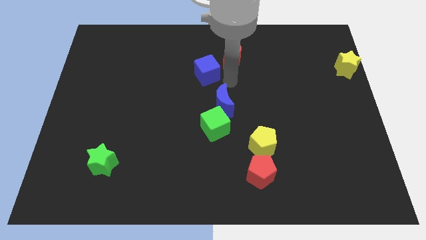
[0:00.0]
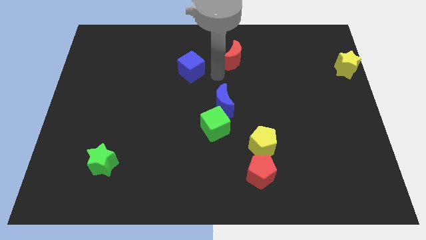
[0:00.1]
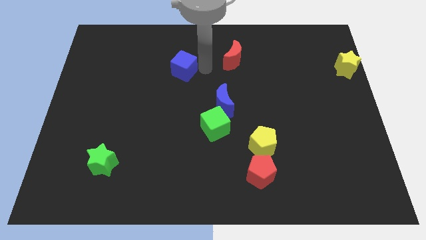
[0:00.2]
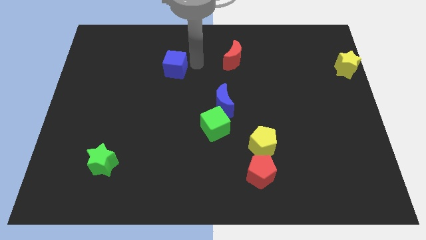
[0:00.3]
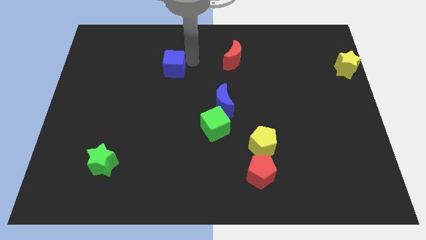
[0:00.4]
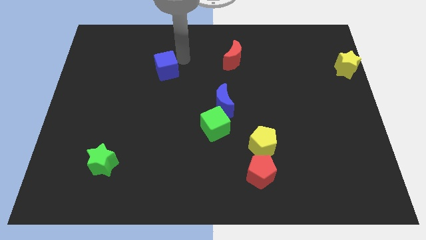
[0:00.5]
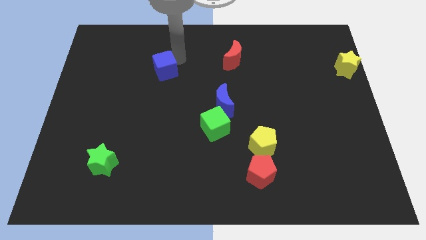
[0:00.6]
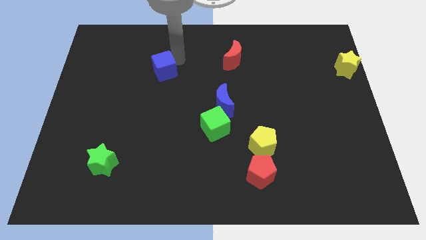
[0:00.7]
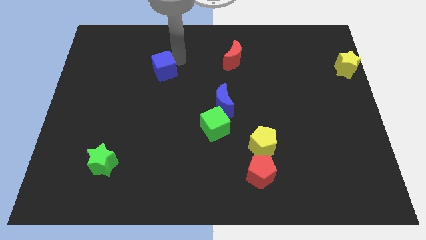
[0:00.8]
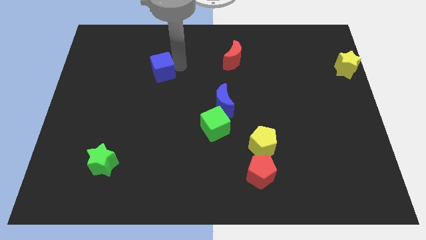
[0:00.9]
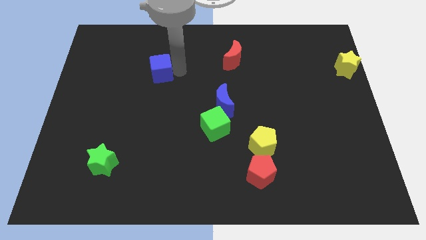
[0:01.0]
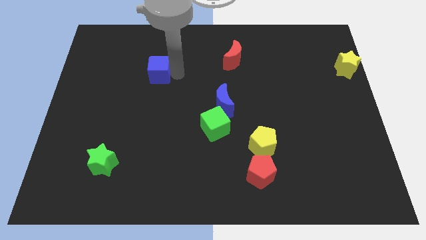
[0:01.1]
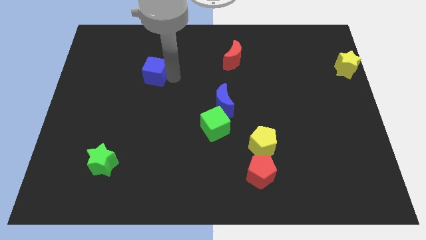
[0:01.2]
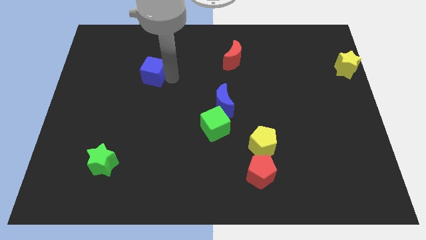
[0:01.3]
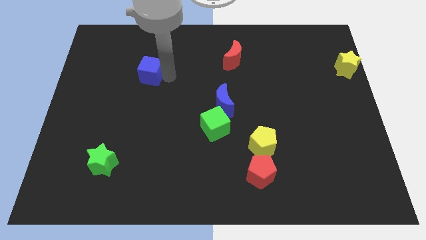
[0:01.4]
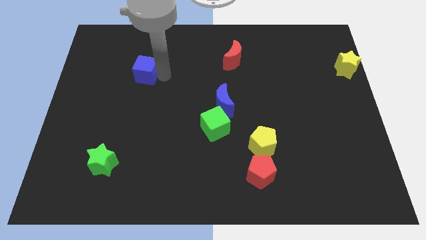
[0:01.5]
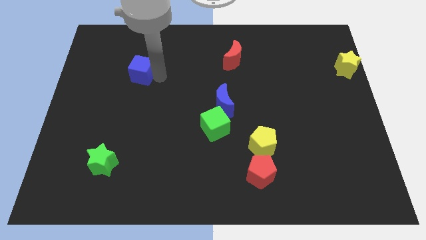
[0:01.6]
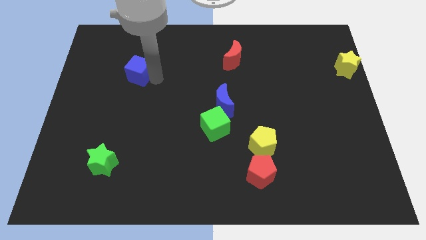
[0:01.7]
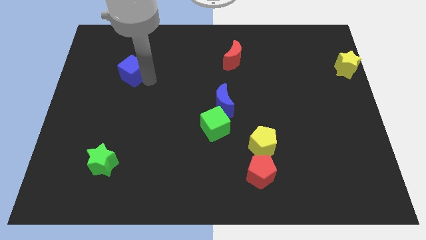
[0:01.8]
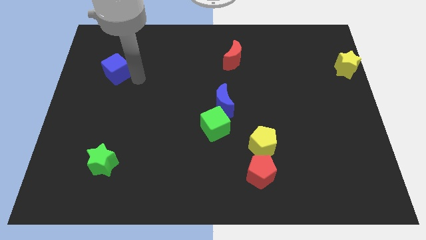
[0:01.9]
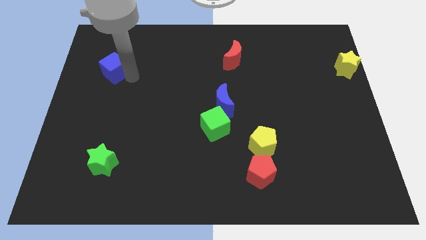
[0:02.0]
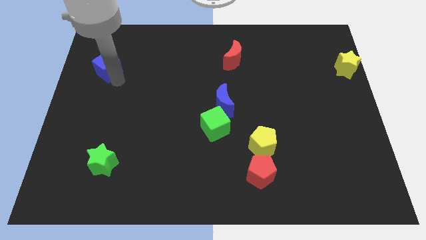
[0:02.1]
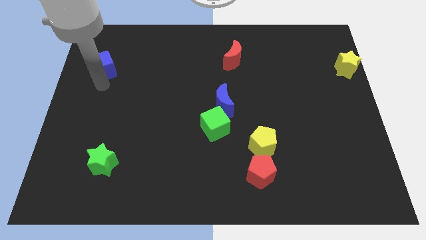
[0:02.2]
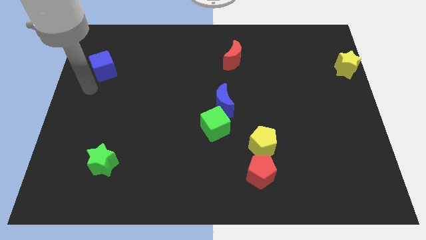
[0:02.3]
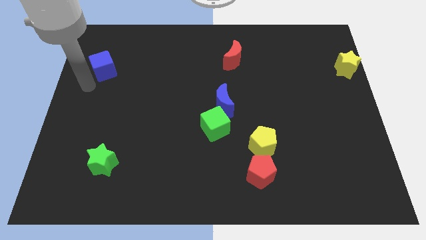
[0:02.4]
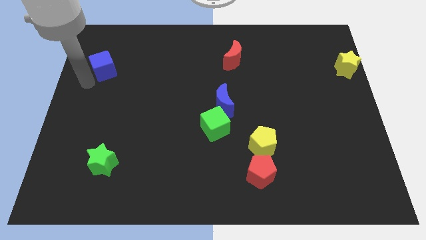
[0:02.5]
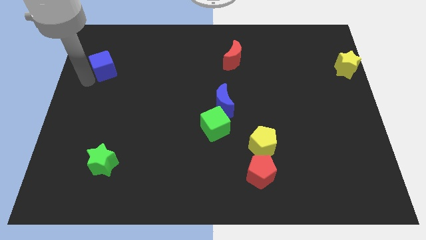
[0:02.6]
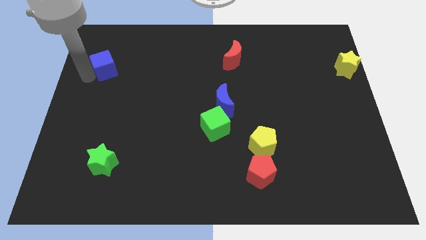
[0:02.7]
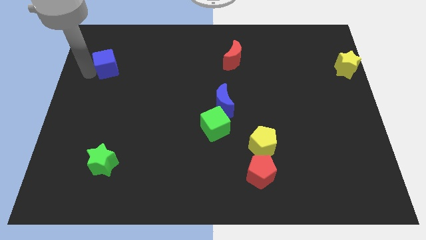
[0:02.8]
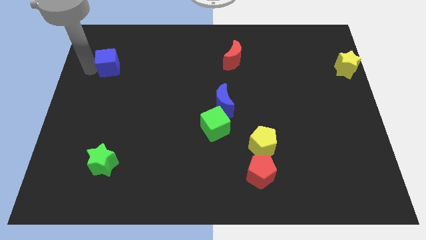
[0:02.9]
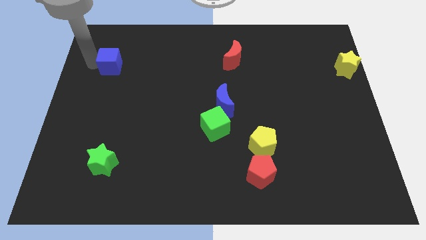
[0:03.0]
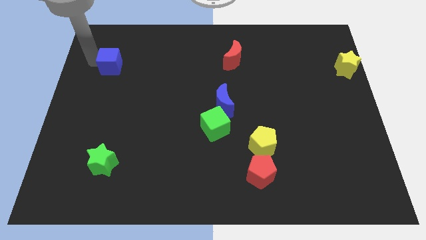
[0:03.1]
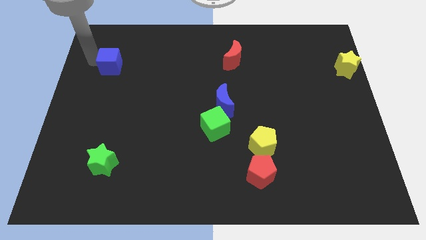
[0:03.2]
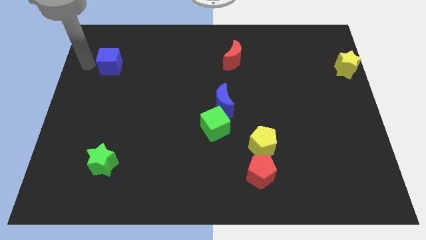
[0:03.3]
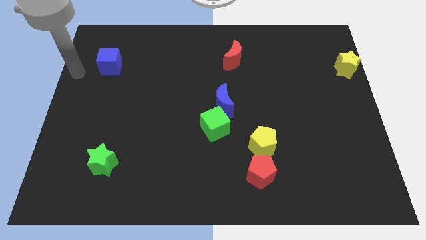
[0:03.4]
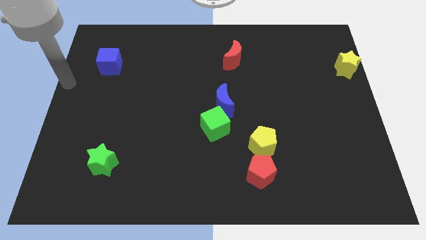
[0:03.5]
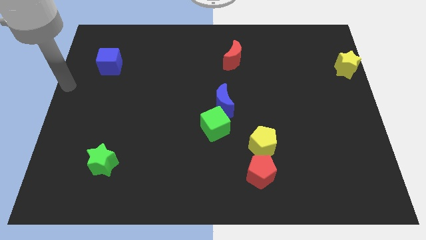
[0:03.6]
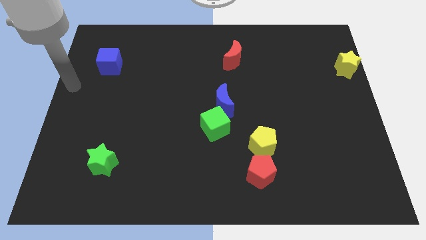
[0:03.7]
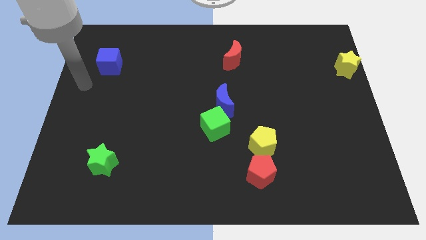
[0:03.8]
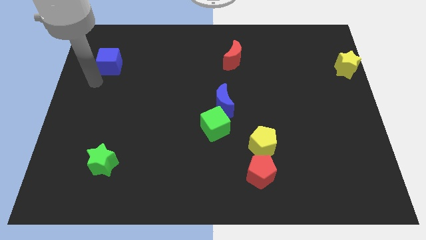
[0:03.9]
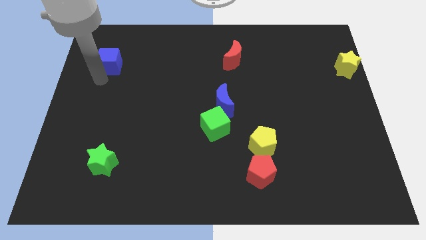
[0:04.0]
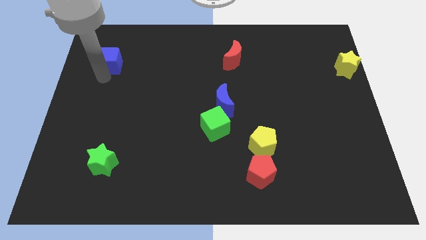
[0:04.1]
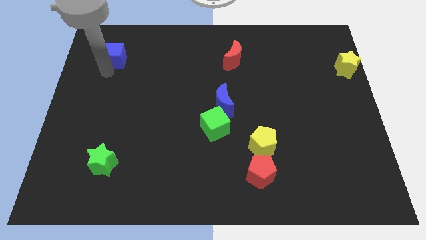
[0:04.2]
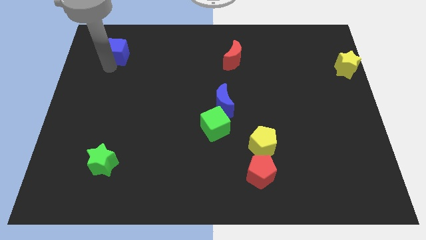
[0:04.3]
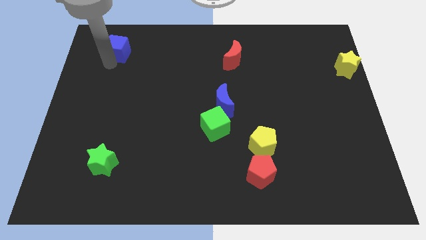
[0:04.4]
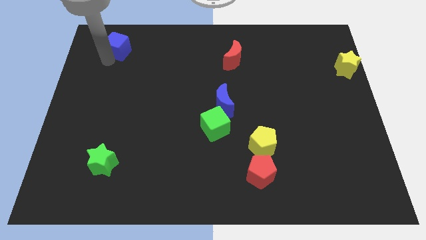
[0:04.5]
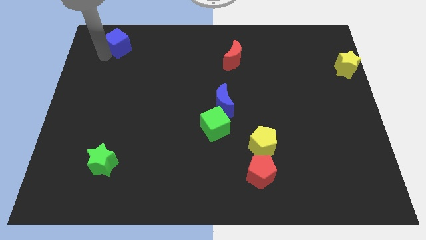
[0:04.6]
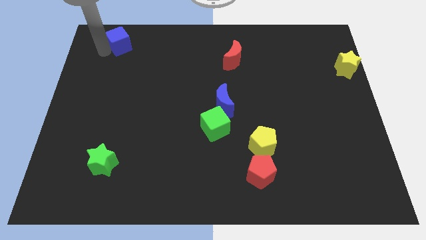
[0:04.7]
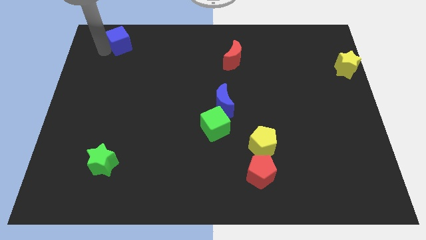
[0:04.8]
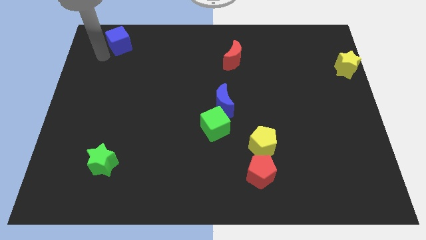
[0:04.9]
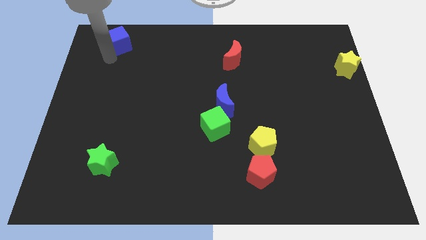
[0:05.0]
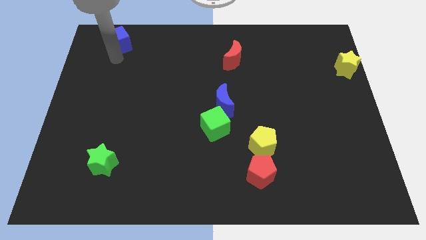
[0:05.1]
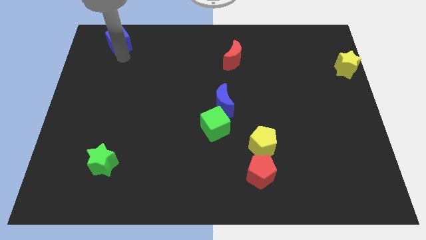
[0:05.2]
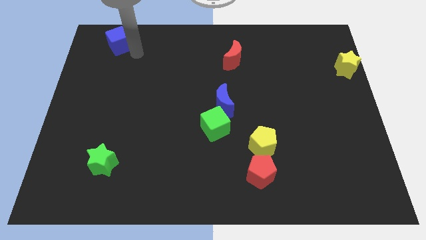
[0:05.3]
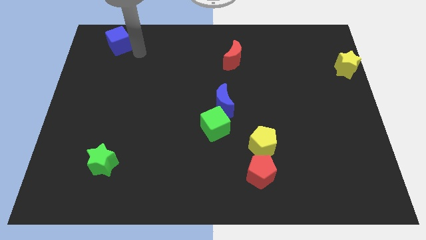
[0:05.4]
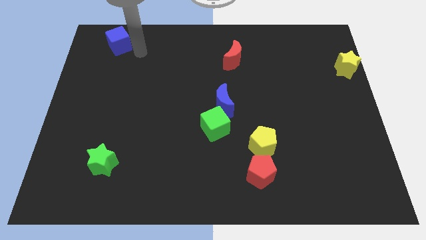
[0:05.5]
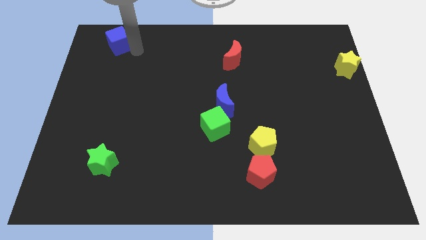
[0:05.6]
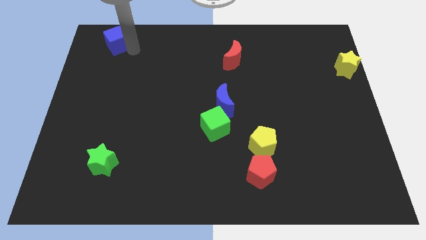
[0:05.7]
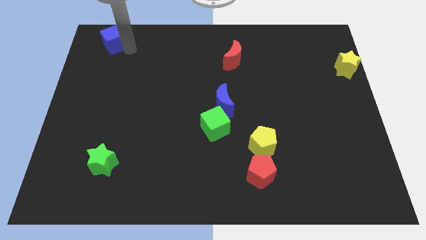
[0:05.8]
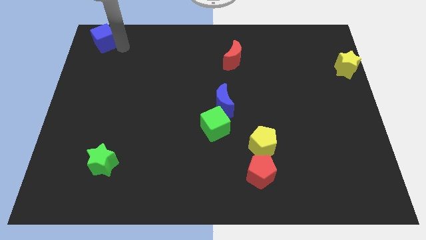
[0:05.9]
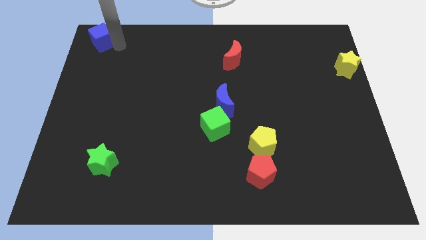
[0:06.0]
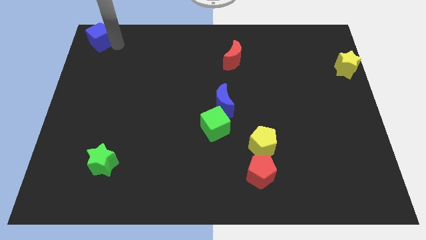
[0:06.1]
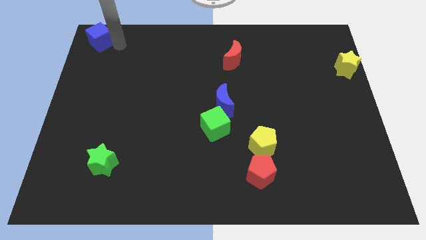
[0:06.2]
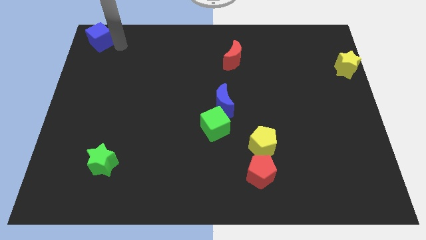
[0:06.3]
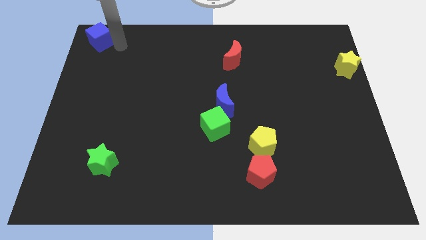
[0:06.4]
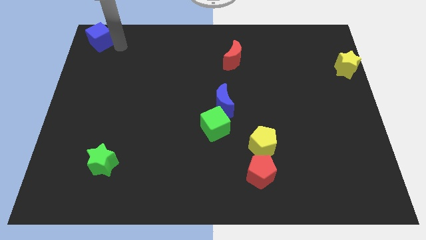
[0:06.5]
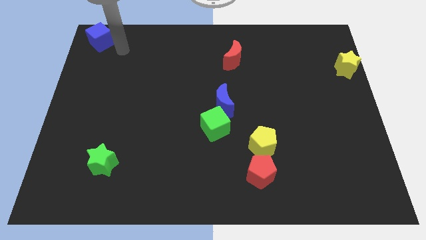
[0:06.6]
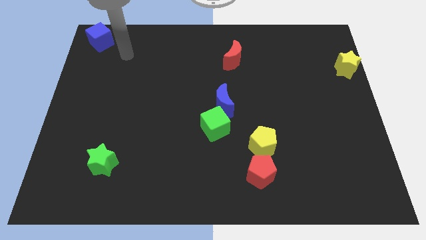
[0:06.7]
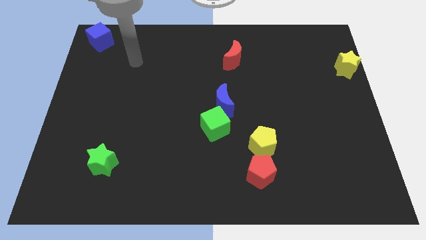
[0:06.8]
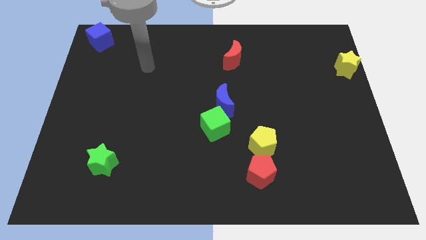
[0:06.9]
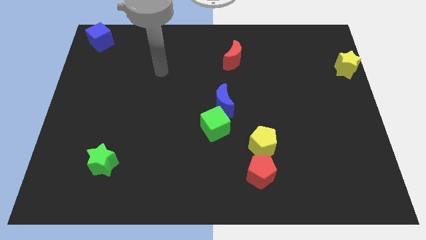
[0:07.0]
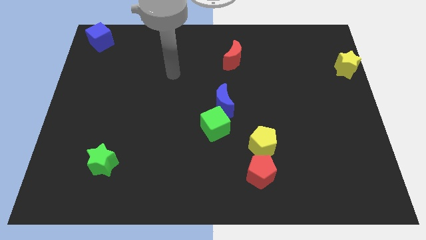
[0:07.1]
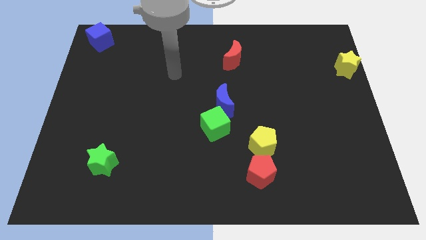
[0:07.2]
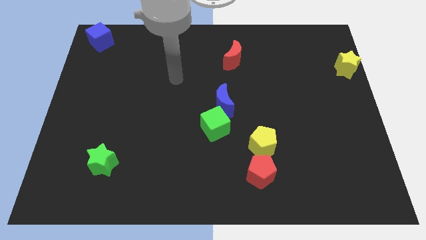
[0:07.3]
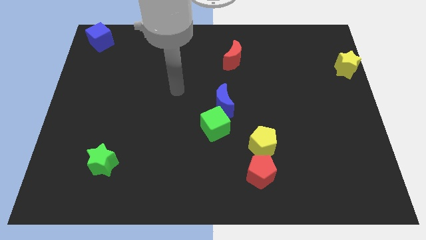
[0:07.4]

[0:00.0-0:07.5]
push blue block towards the top left corner of the board

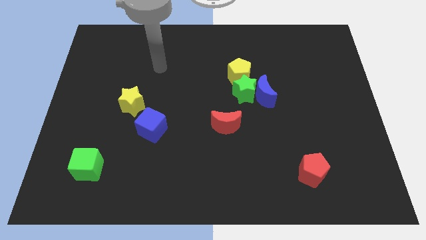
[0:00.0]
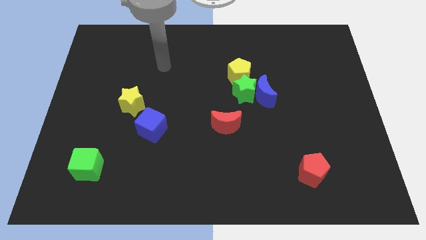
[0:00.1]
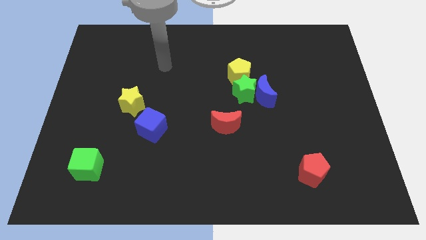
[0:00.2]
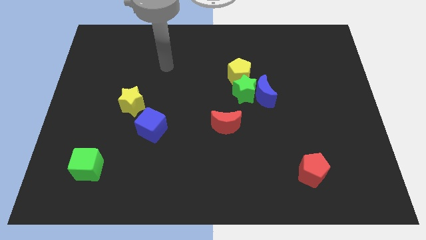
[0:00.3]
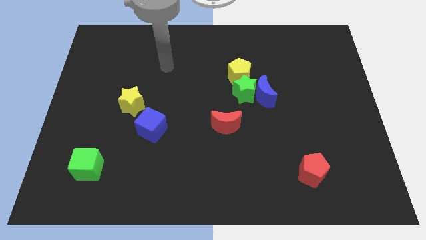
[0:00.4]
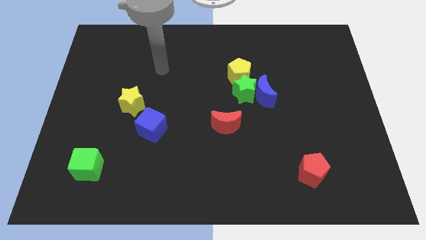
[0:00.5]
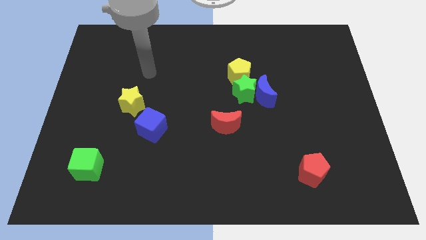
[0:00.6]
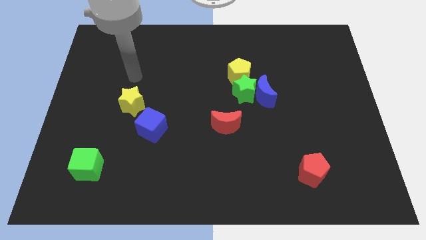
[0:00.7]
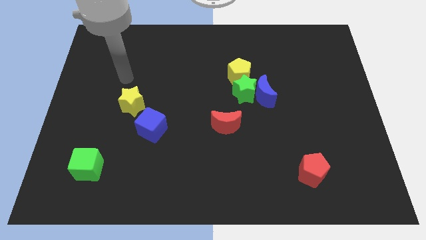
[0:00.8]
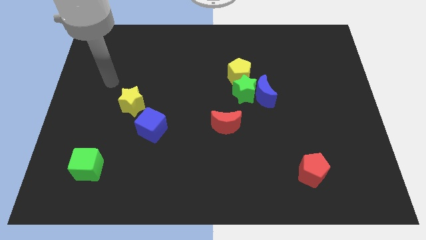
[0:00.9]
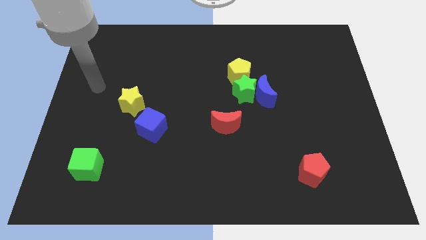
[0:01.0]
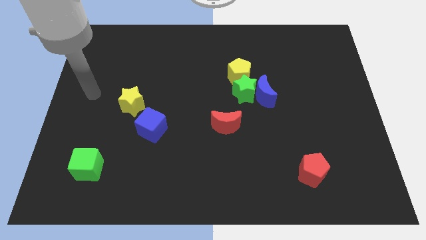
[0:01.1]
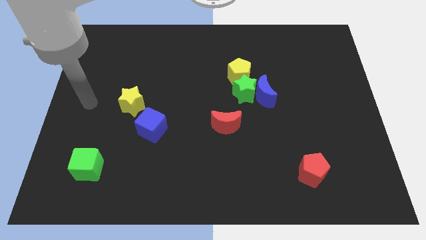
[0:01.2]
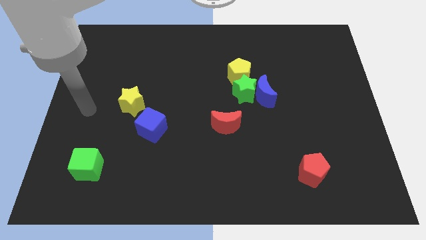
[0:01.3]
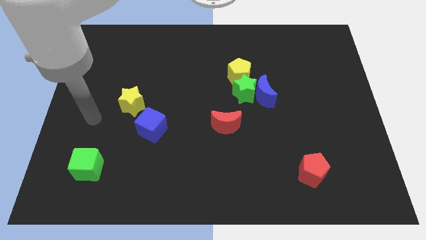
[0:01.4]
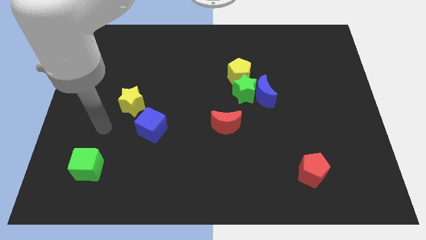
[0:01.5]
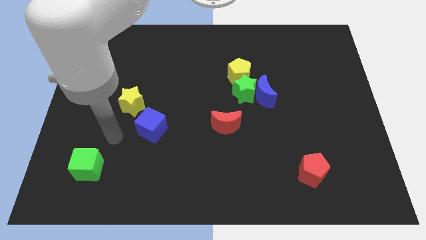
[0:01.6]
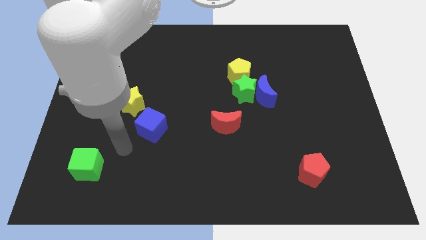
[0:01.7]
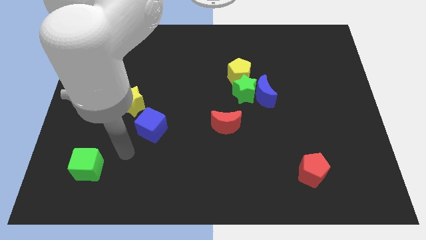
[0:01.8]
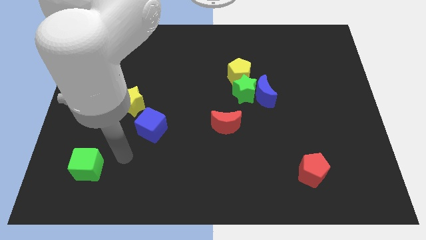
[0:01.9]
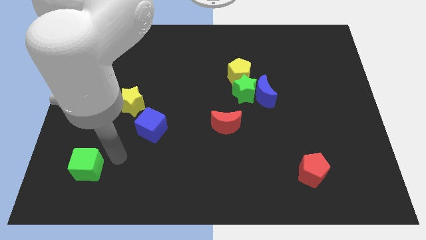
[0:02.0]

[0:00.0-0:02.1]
move your hand towards the green cube
